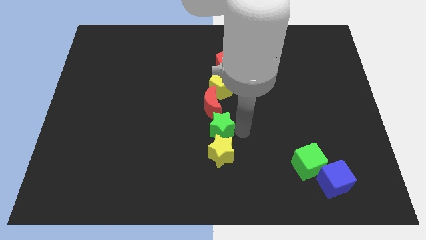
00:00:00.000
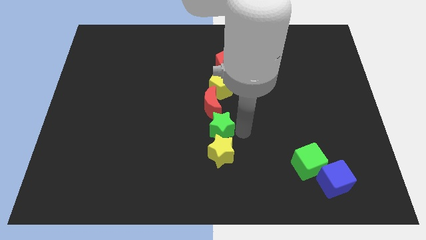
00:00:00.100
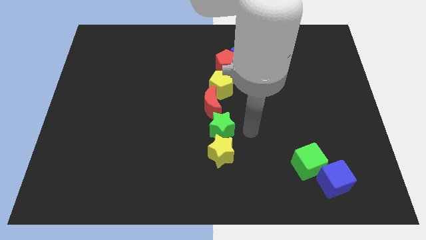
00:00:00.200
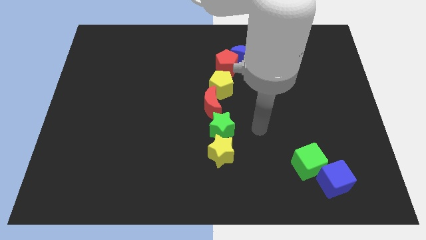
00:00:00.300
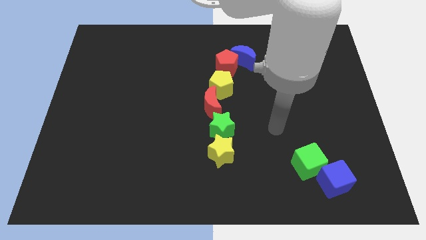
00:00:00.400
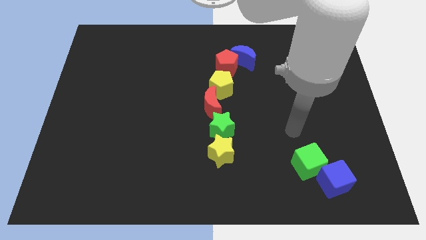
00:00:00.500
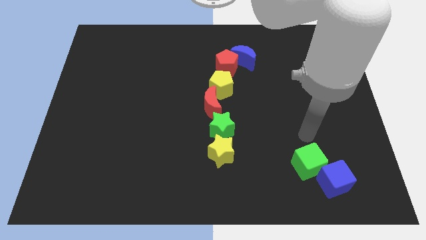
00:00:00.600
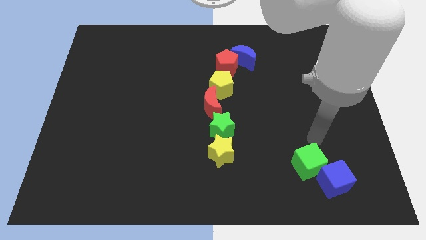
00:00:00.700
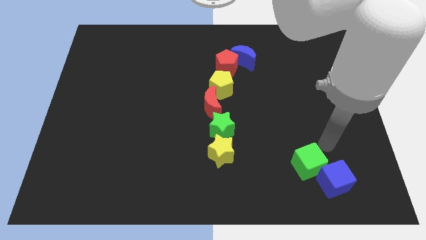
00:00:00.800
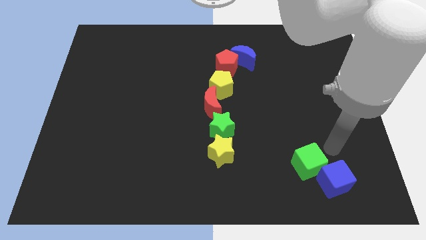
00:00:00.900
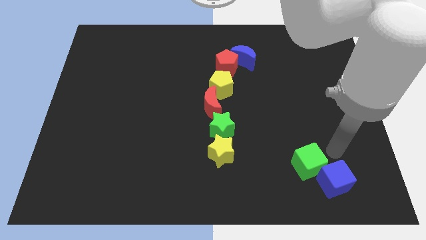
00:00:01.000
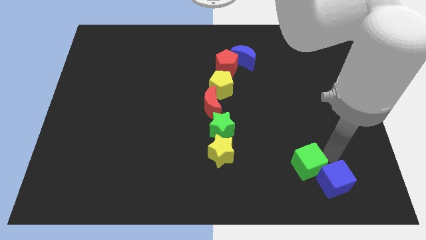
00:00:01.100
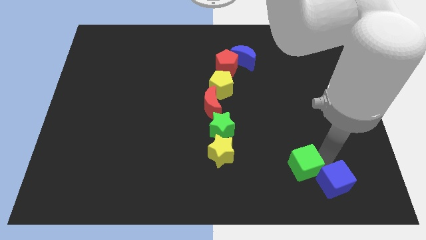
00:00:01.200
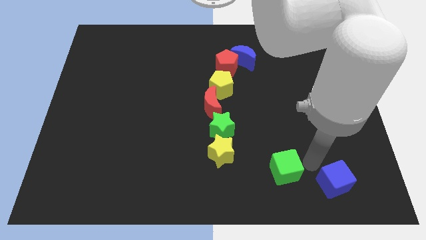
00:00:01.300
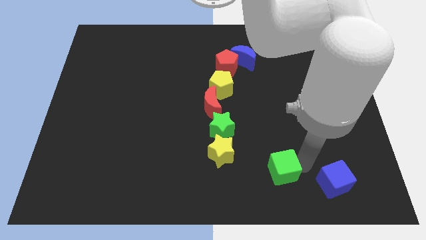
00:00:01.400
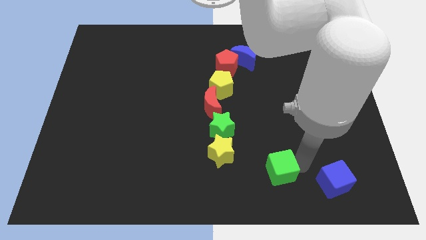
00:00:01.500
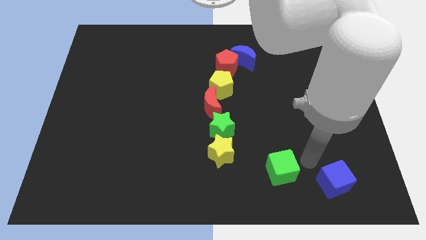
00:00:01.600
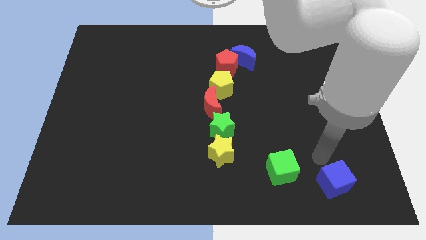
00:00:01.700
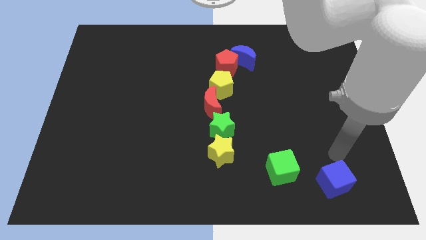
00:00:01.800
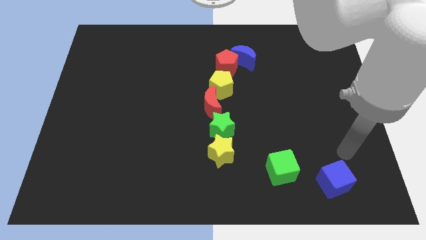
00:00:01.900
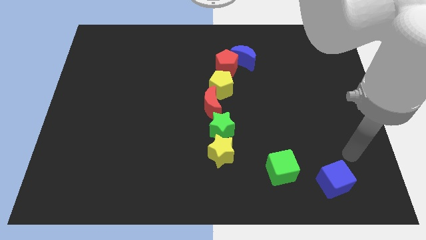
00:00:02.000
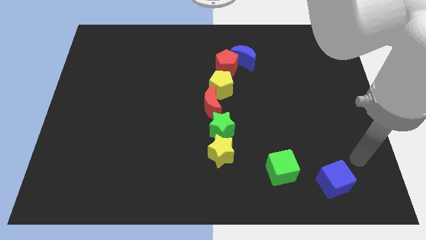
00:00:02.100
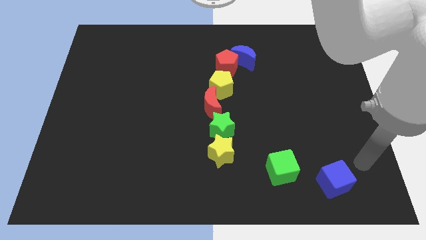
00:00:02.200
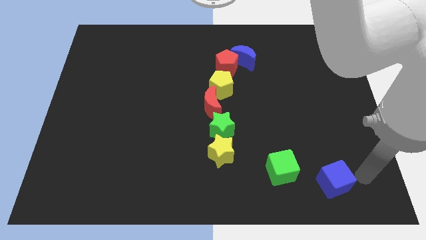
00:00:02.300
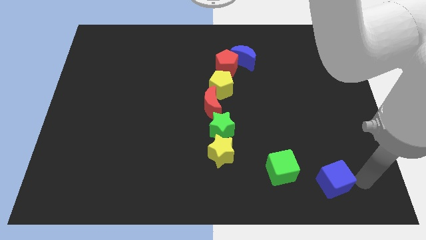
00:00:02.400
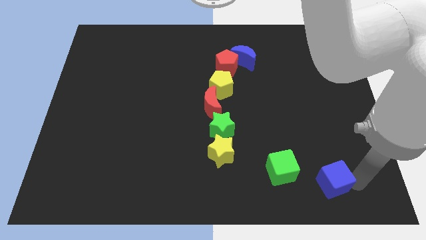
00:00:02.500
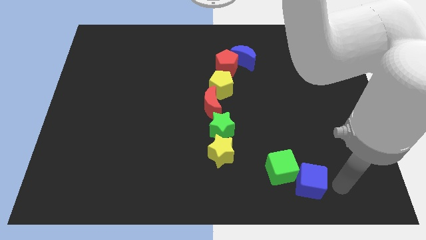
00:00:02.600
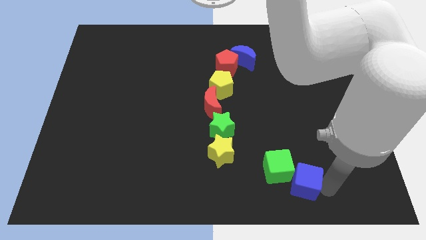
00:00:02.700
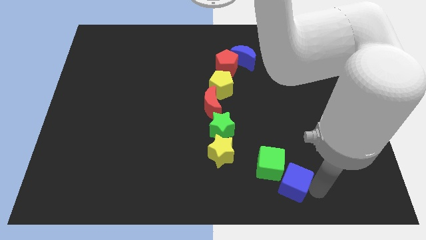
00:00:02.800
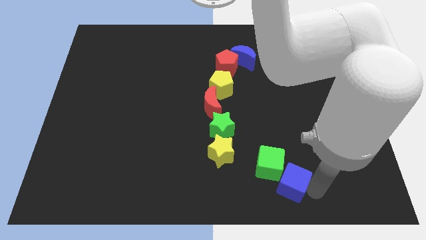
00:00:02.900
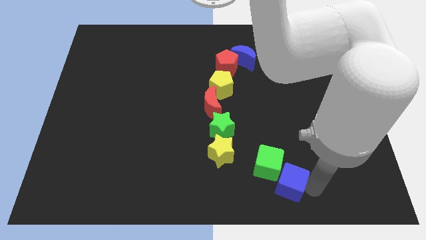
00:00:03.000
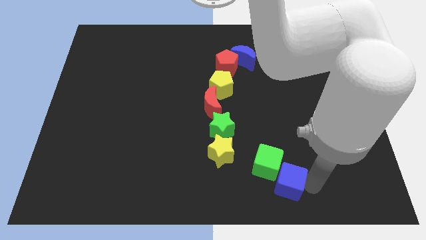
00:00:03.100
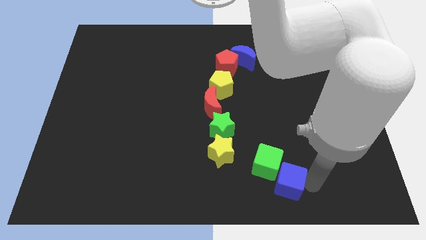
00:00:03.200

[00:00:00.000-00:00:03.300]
push the cubes towards the left side of the board

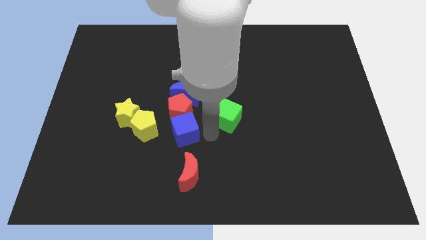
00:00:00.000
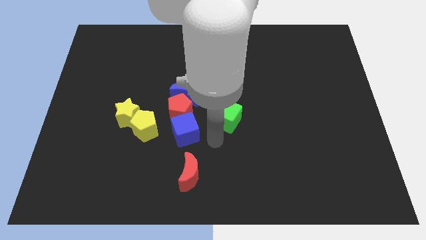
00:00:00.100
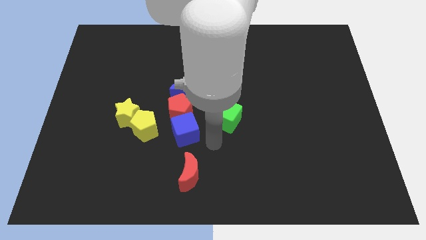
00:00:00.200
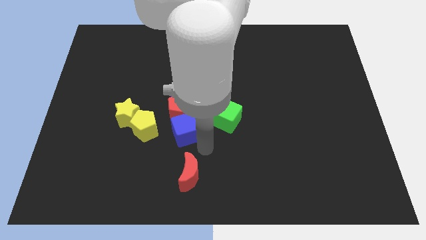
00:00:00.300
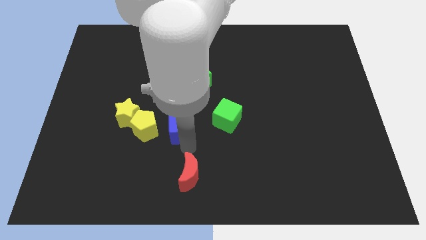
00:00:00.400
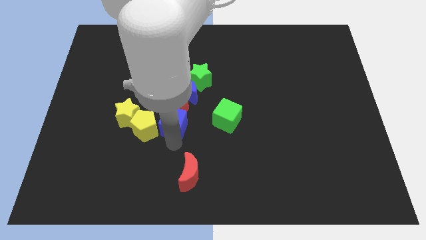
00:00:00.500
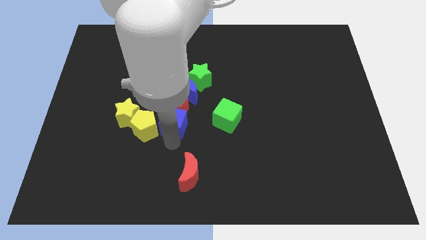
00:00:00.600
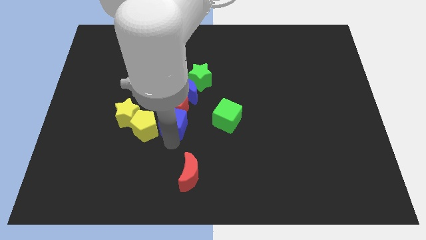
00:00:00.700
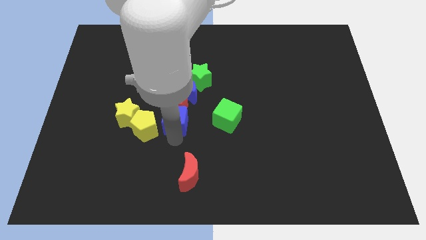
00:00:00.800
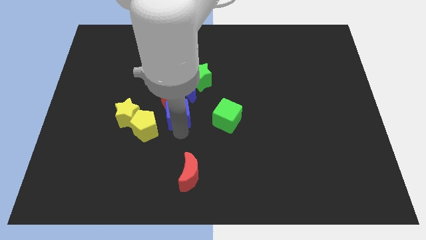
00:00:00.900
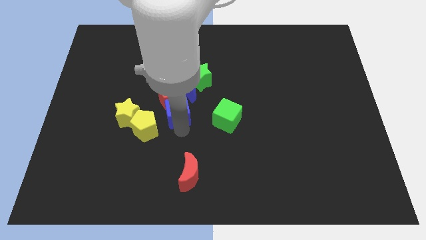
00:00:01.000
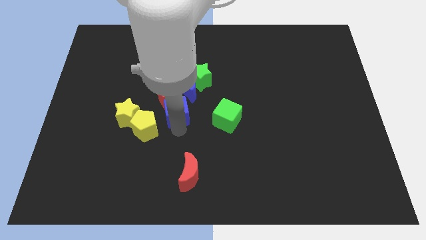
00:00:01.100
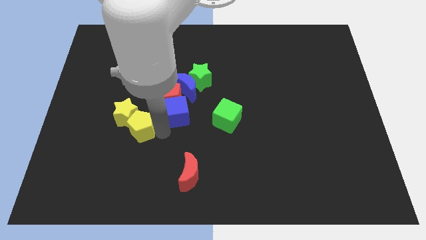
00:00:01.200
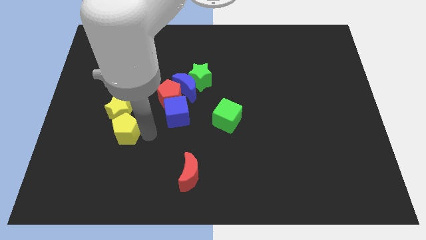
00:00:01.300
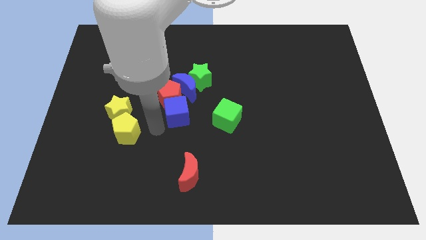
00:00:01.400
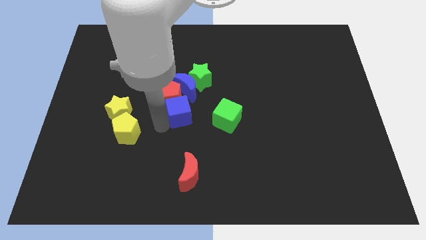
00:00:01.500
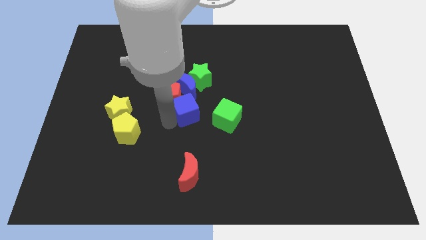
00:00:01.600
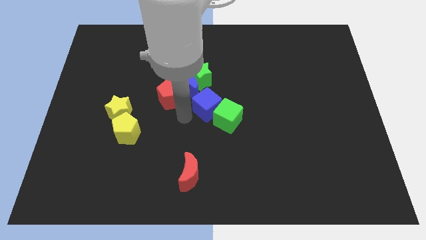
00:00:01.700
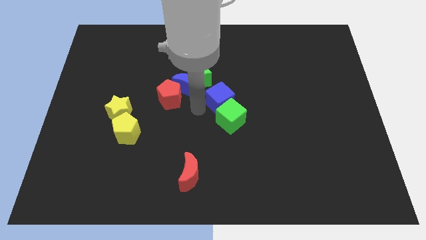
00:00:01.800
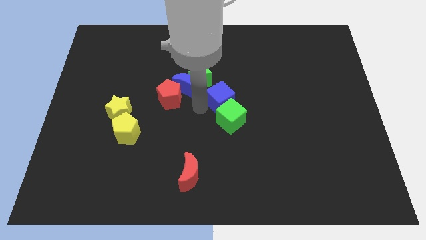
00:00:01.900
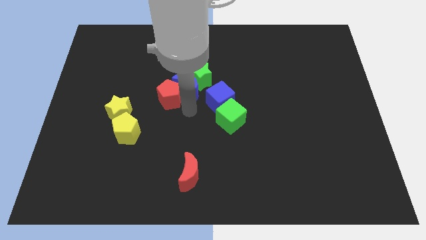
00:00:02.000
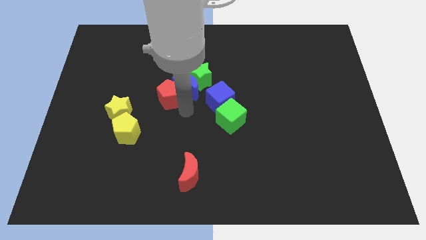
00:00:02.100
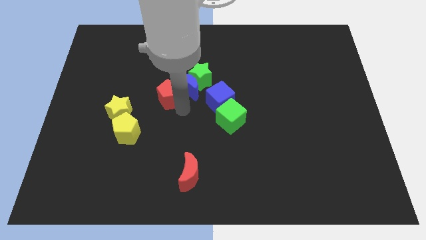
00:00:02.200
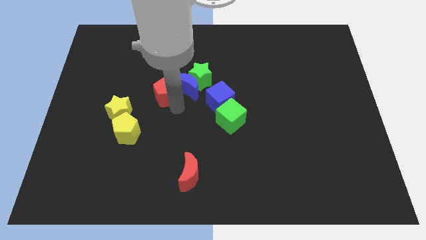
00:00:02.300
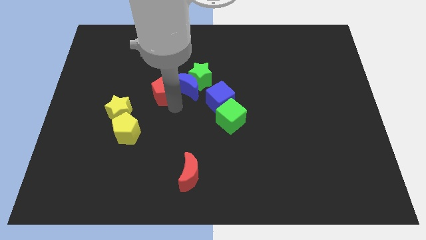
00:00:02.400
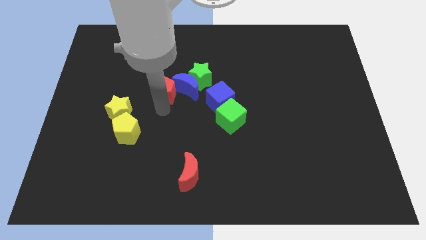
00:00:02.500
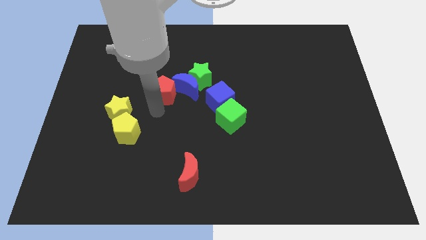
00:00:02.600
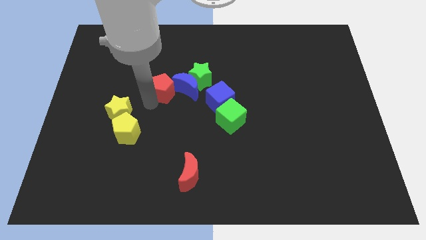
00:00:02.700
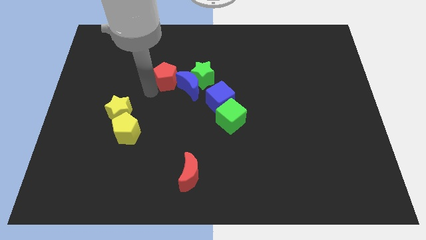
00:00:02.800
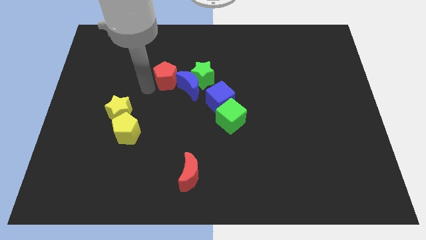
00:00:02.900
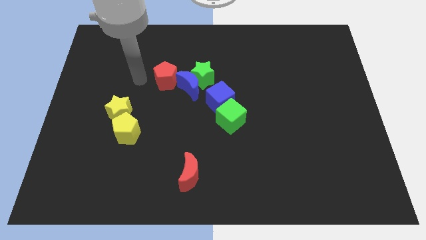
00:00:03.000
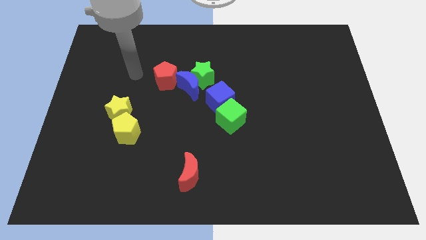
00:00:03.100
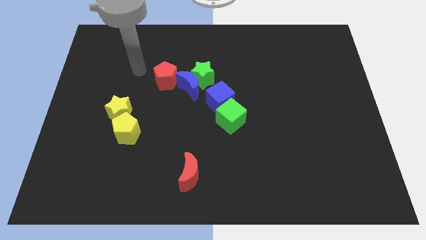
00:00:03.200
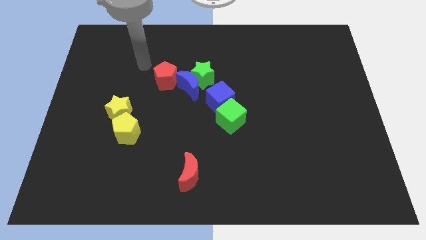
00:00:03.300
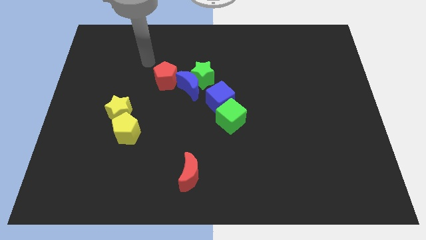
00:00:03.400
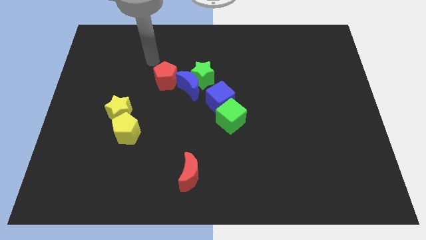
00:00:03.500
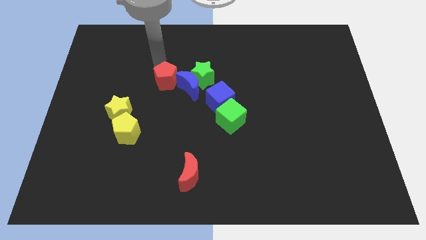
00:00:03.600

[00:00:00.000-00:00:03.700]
separate the blue cube and red pentagon

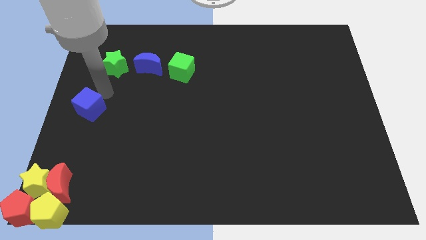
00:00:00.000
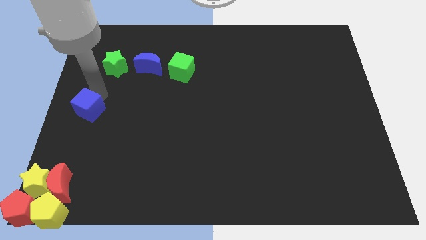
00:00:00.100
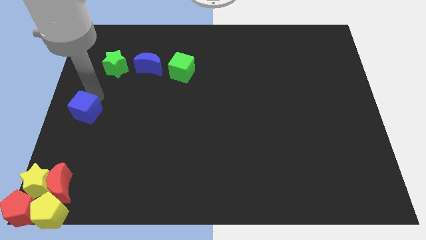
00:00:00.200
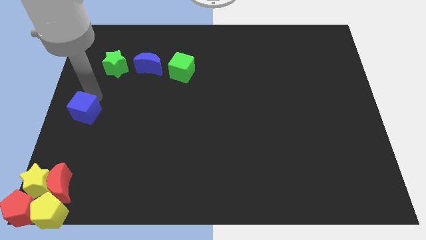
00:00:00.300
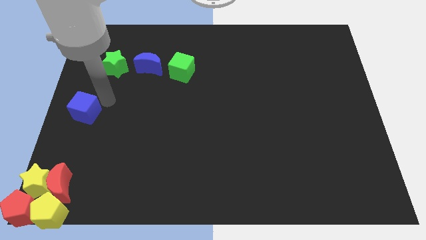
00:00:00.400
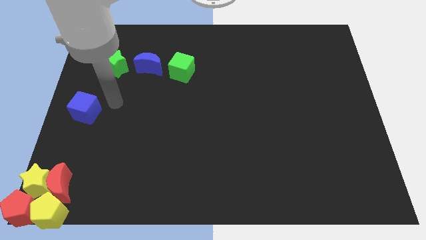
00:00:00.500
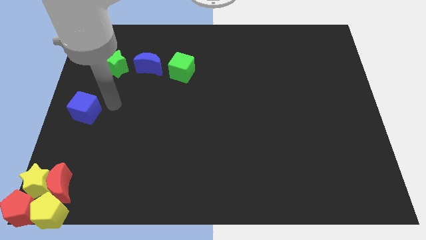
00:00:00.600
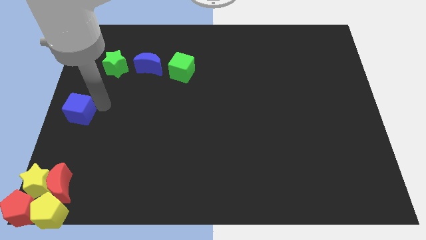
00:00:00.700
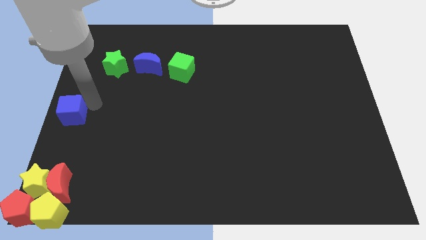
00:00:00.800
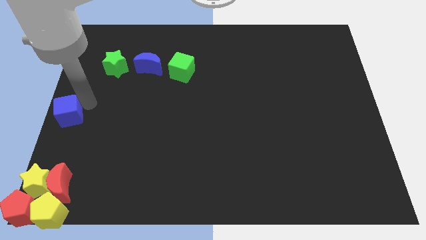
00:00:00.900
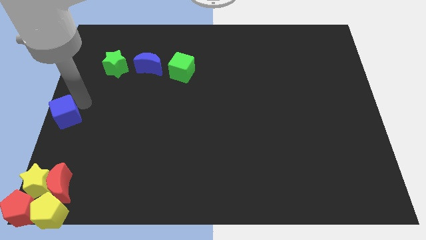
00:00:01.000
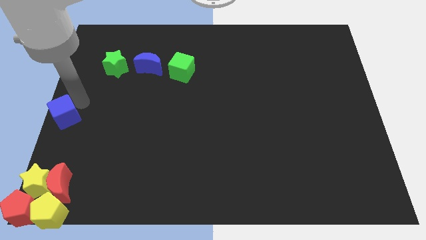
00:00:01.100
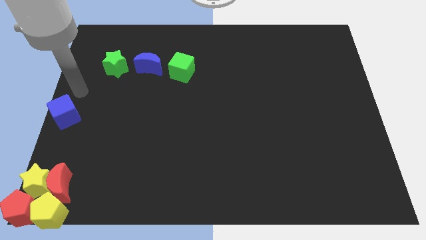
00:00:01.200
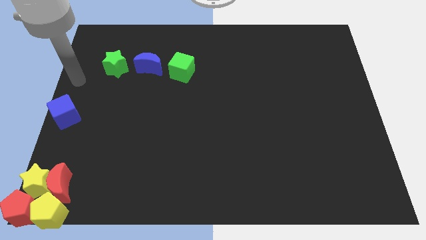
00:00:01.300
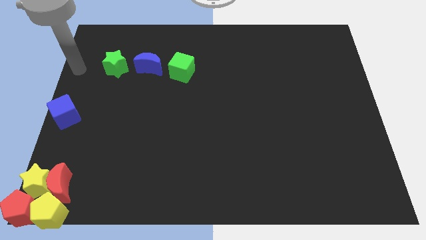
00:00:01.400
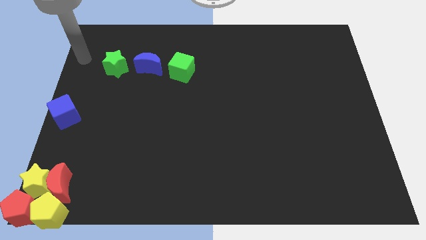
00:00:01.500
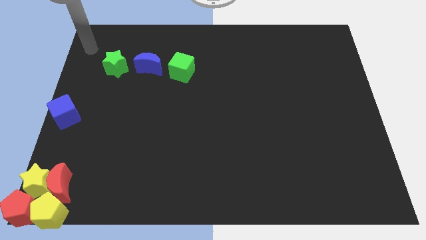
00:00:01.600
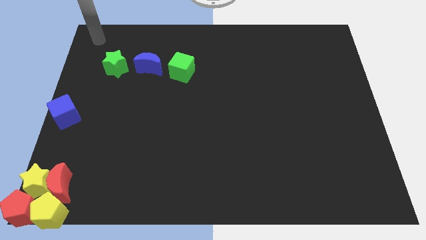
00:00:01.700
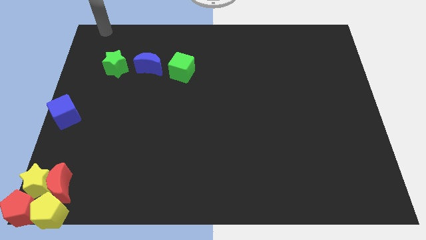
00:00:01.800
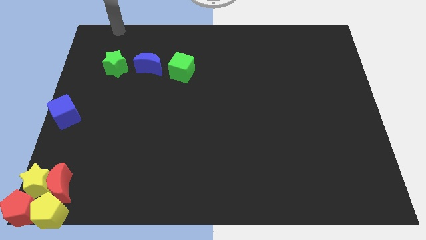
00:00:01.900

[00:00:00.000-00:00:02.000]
move the blue cube to the left center of the board

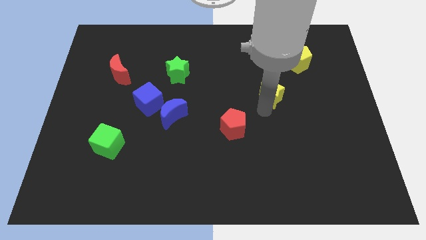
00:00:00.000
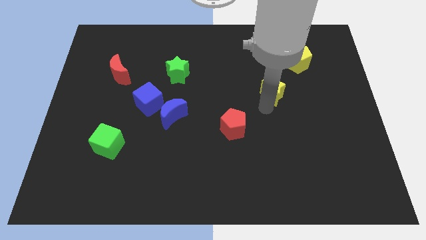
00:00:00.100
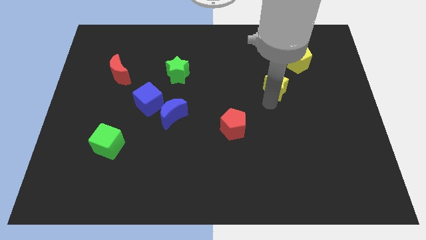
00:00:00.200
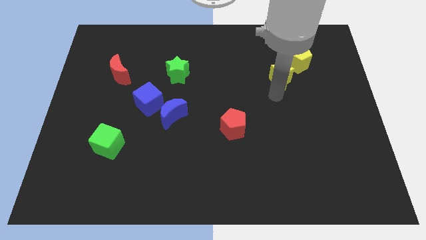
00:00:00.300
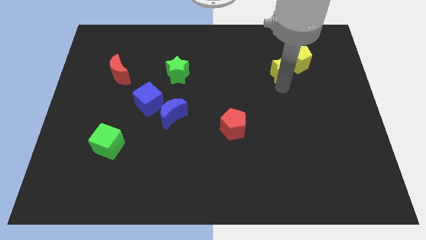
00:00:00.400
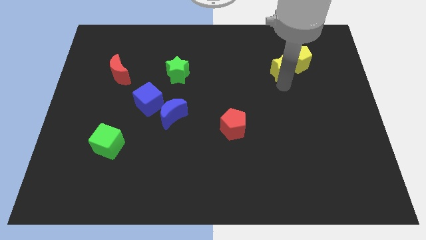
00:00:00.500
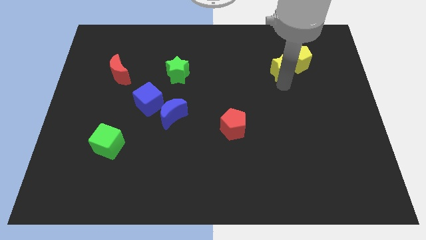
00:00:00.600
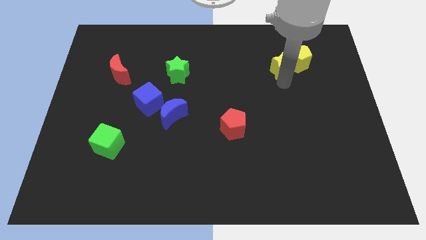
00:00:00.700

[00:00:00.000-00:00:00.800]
move yellow star towards yellow pentagon
